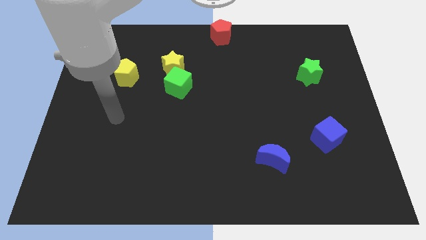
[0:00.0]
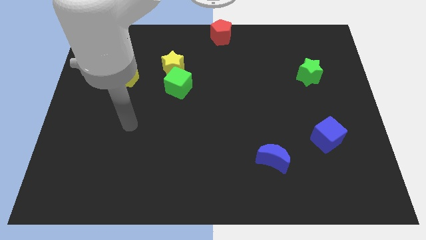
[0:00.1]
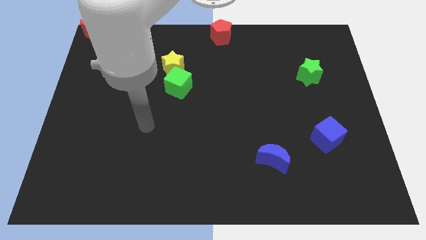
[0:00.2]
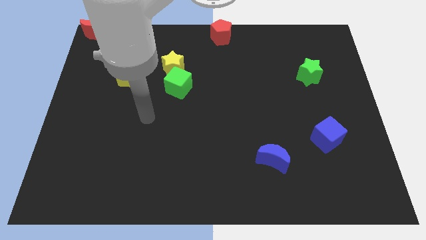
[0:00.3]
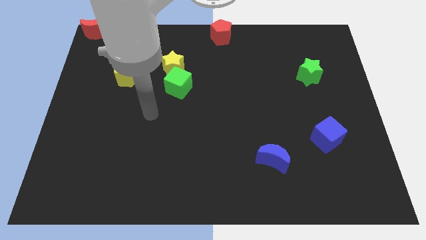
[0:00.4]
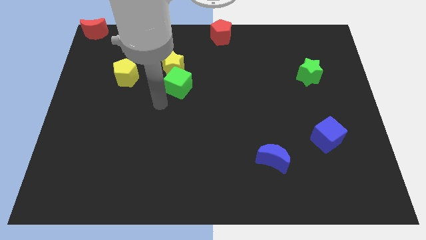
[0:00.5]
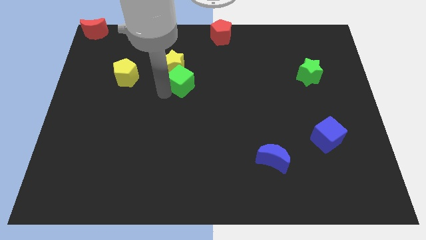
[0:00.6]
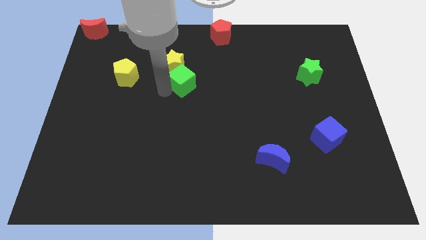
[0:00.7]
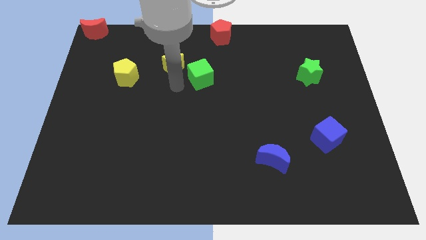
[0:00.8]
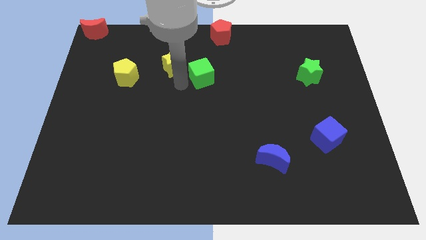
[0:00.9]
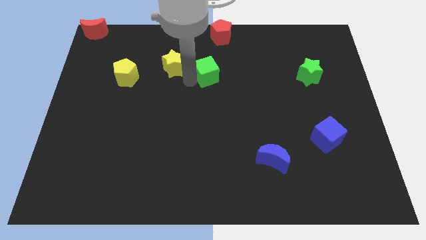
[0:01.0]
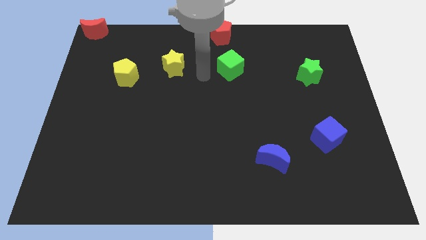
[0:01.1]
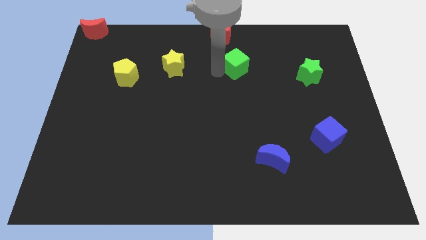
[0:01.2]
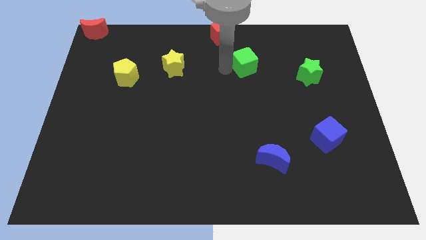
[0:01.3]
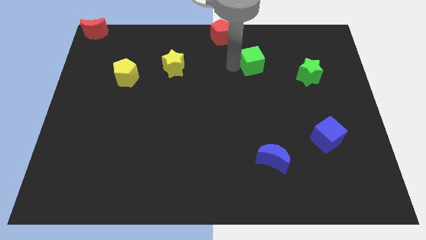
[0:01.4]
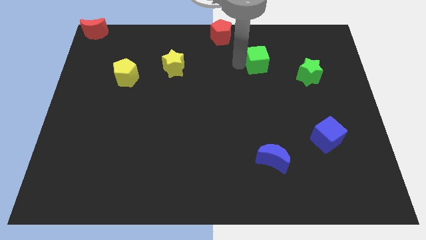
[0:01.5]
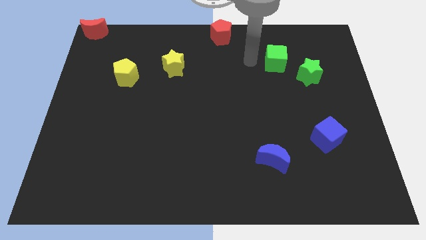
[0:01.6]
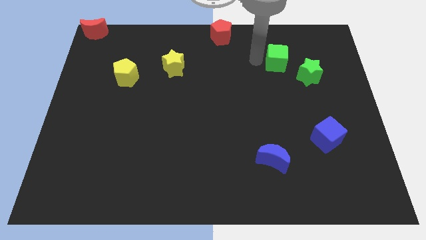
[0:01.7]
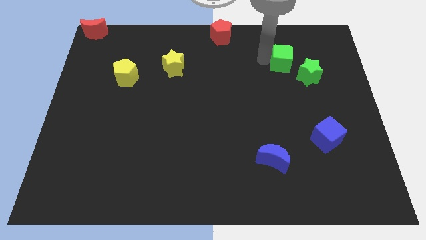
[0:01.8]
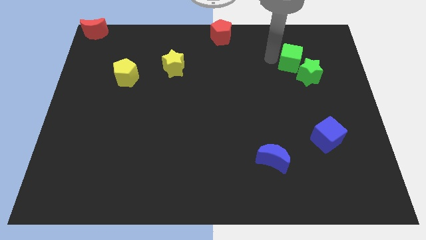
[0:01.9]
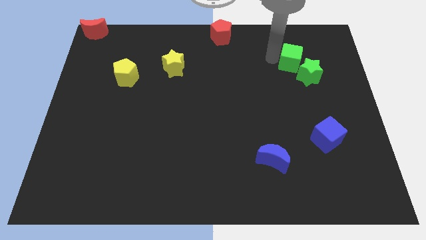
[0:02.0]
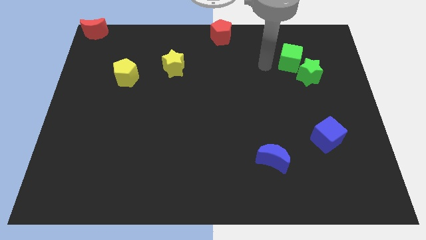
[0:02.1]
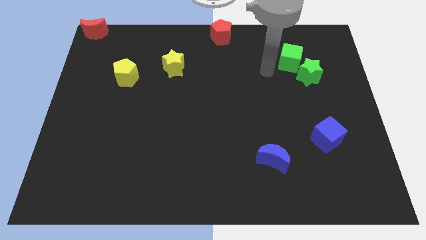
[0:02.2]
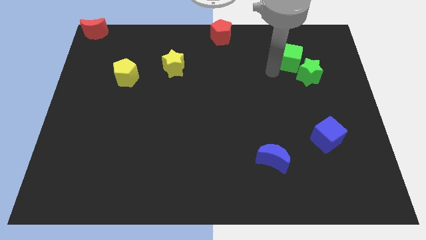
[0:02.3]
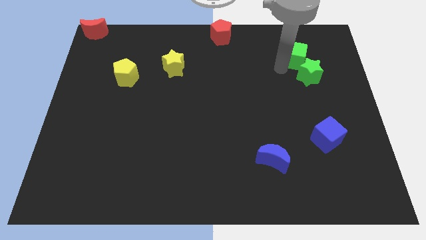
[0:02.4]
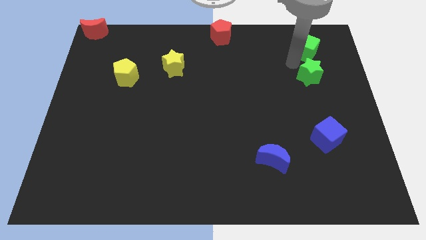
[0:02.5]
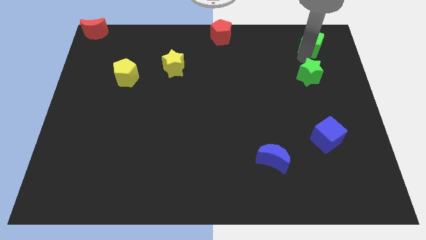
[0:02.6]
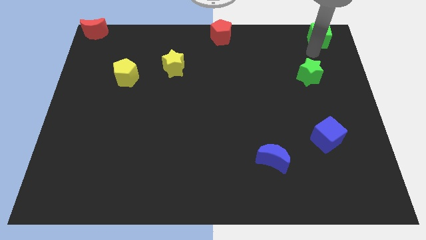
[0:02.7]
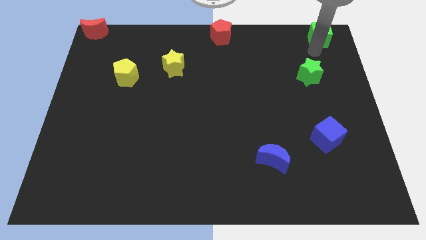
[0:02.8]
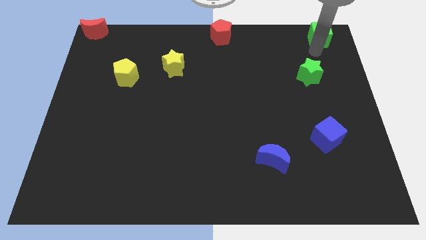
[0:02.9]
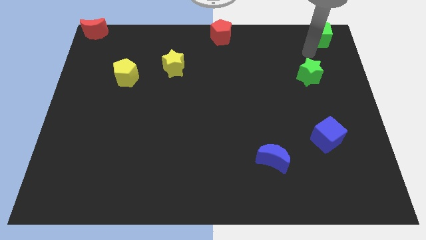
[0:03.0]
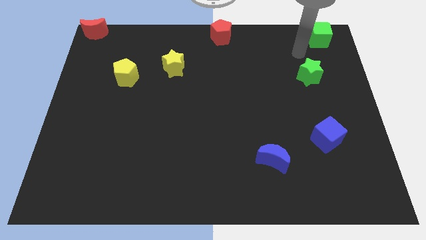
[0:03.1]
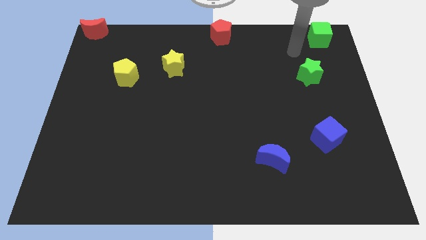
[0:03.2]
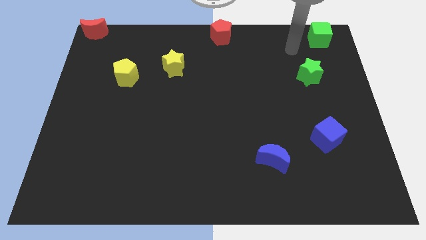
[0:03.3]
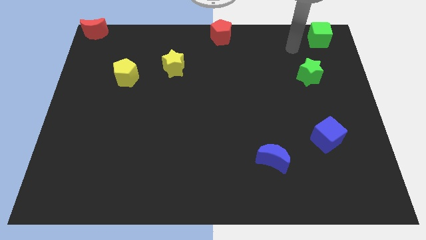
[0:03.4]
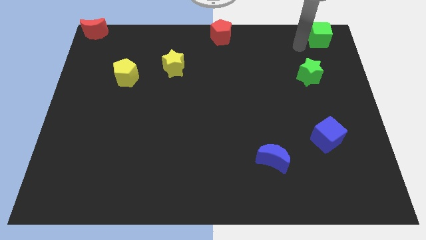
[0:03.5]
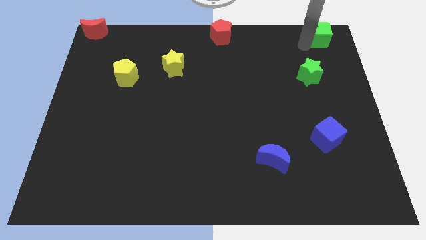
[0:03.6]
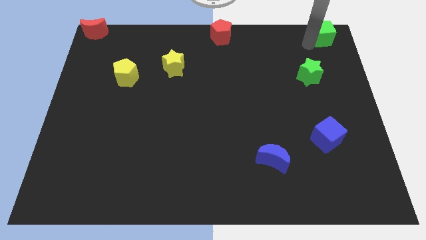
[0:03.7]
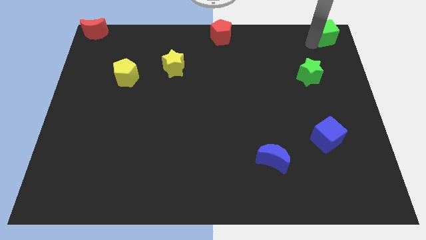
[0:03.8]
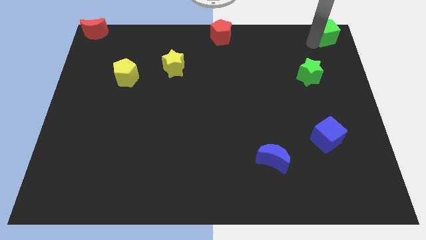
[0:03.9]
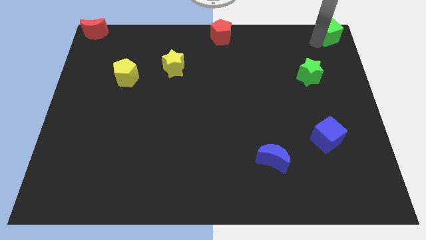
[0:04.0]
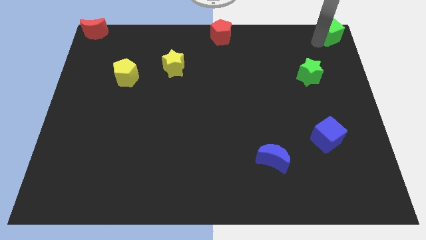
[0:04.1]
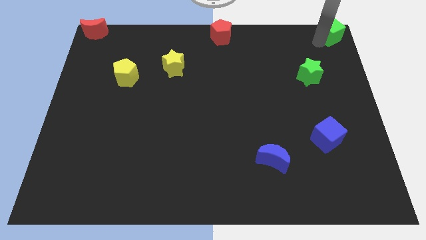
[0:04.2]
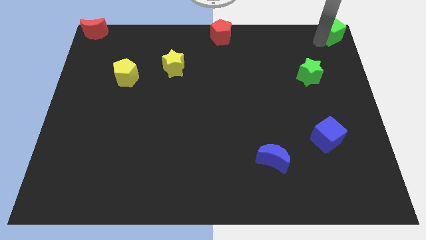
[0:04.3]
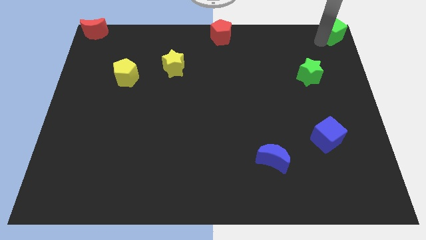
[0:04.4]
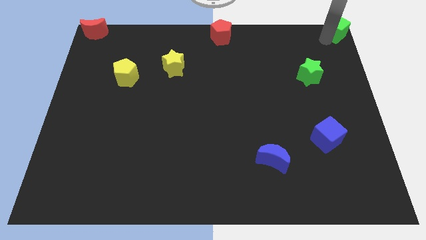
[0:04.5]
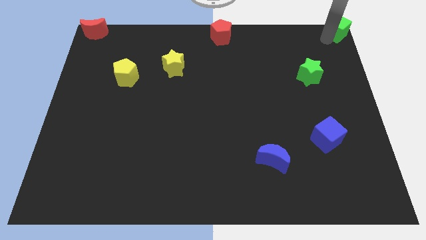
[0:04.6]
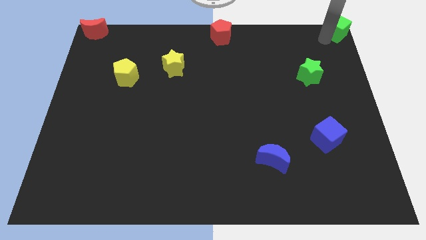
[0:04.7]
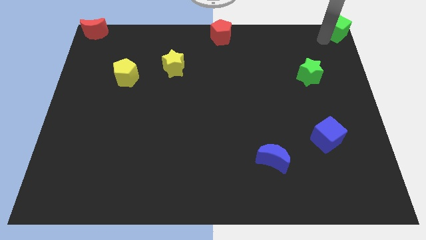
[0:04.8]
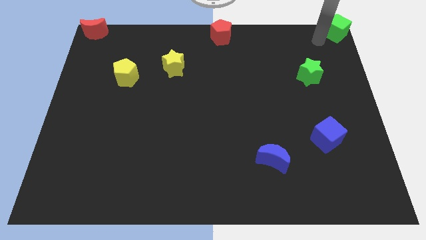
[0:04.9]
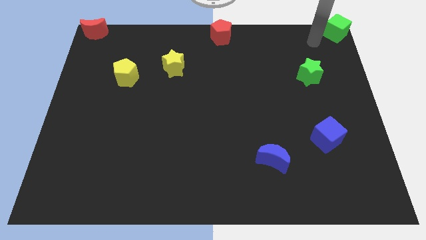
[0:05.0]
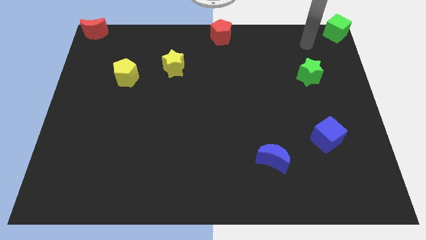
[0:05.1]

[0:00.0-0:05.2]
move the green cube to the top right corner of the board

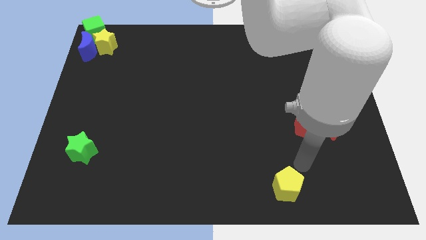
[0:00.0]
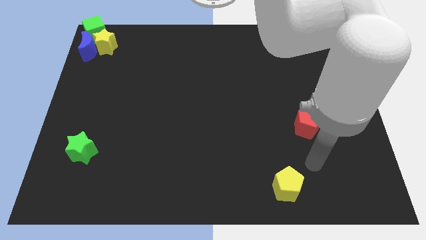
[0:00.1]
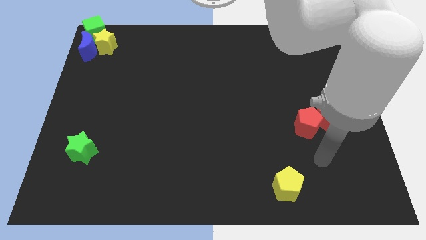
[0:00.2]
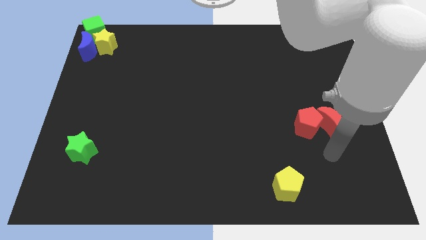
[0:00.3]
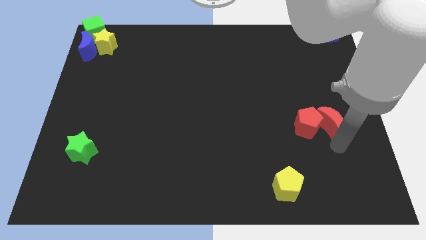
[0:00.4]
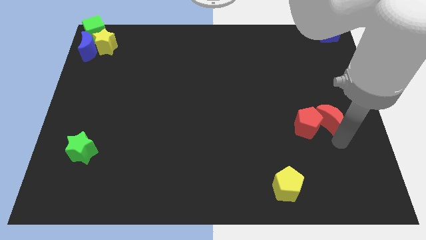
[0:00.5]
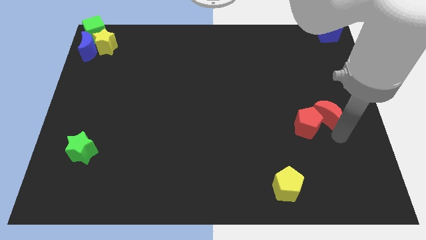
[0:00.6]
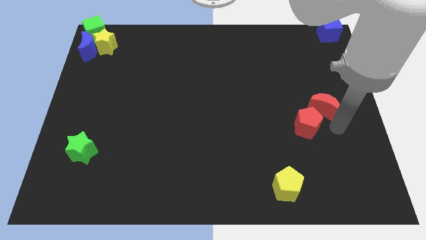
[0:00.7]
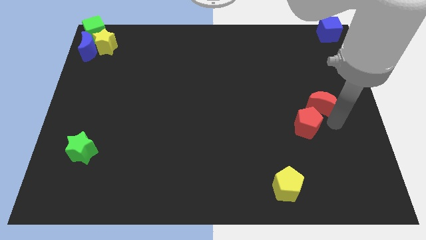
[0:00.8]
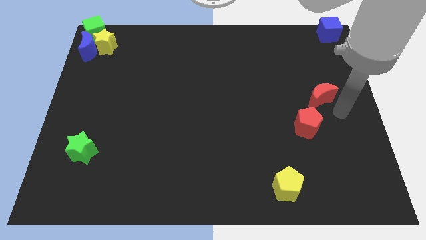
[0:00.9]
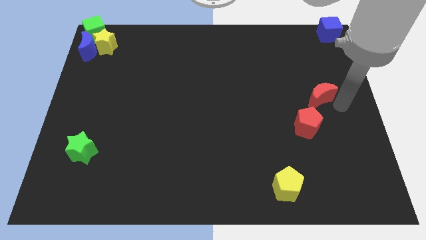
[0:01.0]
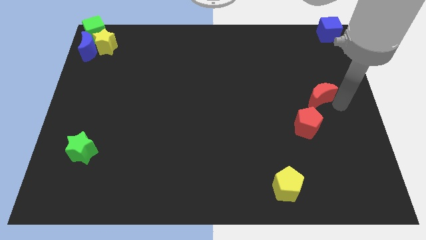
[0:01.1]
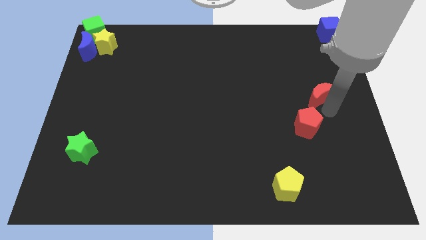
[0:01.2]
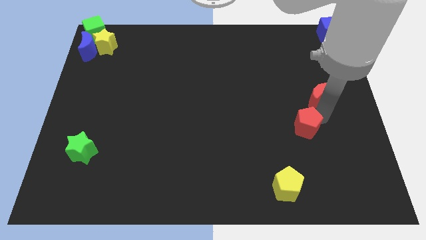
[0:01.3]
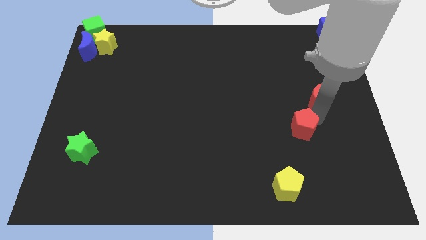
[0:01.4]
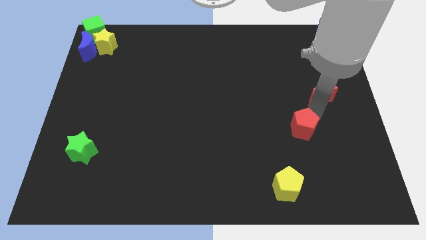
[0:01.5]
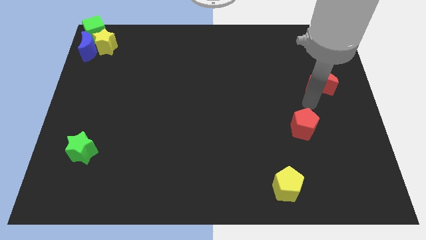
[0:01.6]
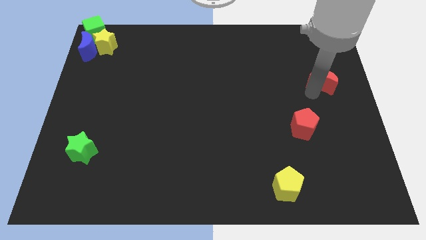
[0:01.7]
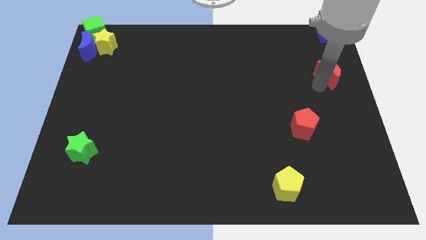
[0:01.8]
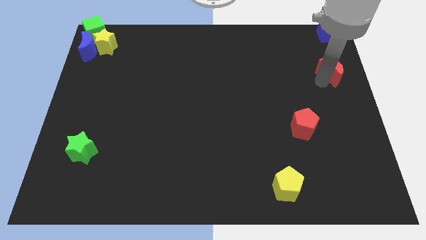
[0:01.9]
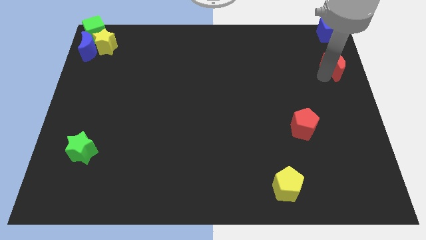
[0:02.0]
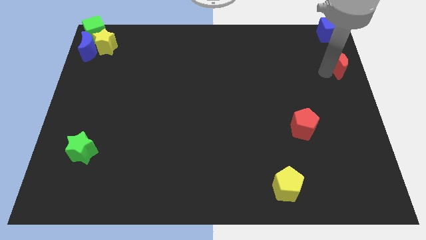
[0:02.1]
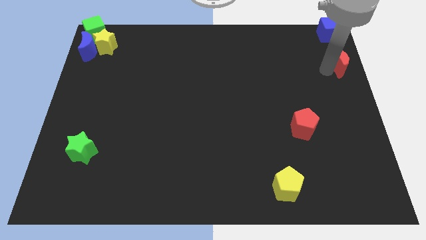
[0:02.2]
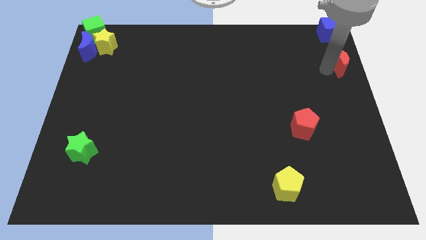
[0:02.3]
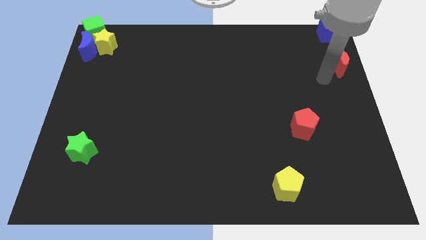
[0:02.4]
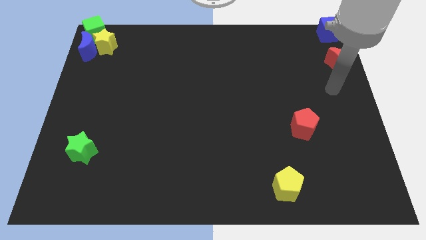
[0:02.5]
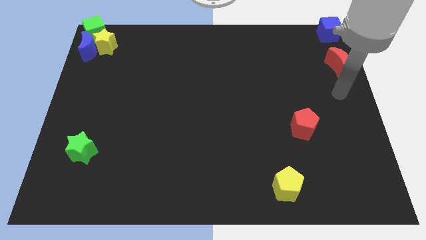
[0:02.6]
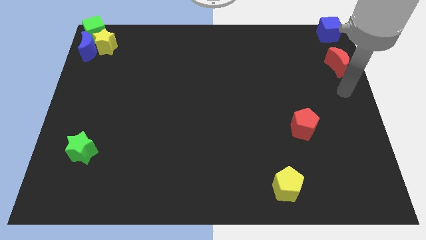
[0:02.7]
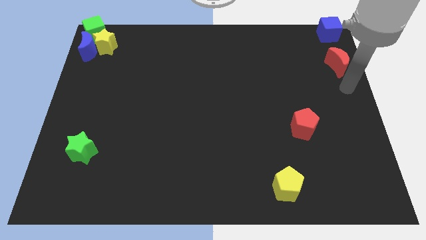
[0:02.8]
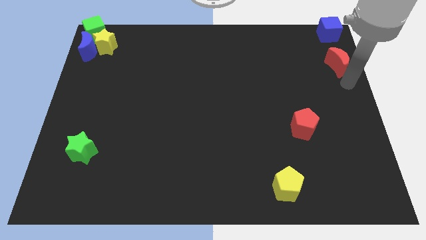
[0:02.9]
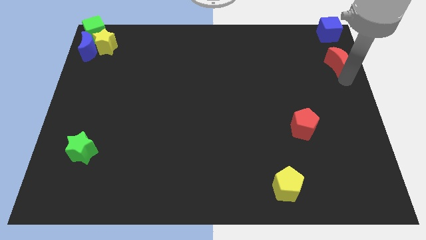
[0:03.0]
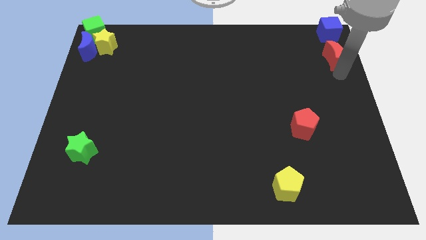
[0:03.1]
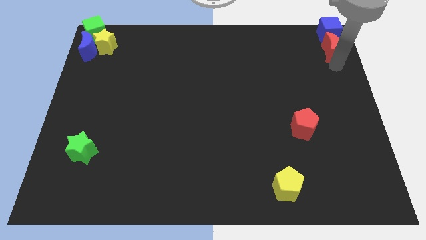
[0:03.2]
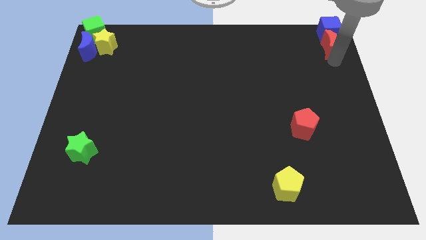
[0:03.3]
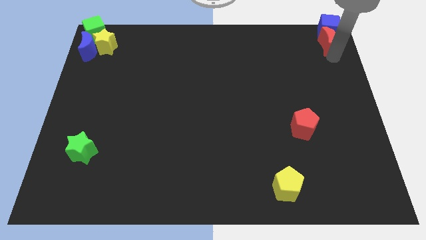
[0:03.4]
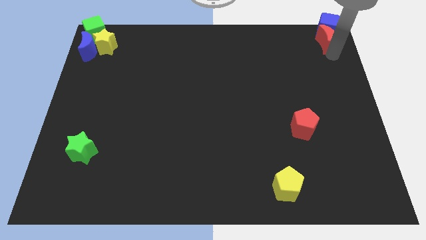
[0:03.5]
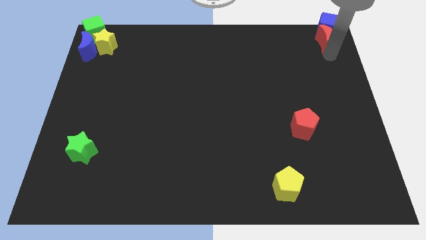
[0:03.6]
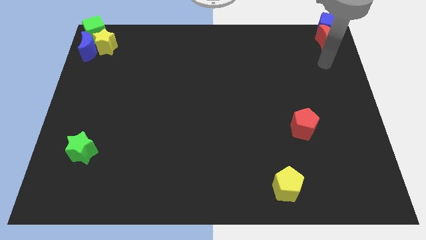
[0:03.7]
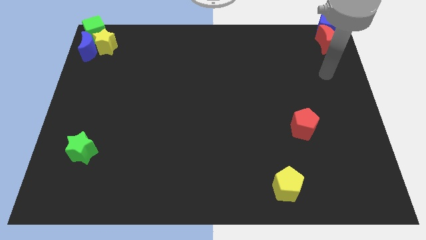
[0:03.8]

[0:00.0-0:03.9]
move the red crescent into the blue cube
